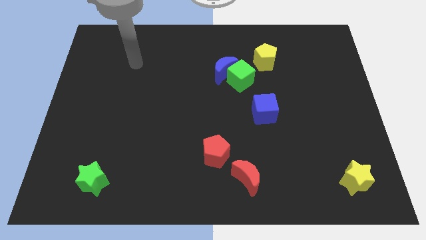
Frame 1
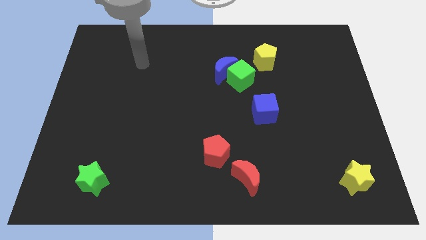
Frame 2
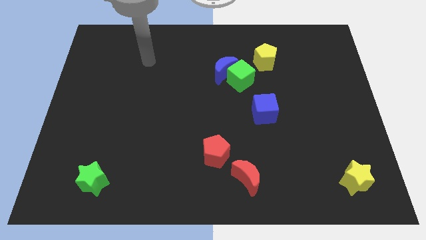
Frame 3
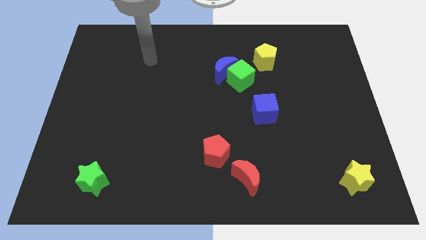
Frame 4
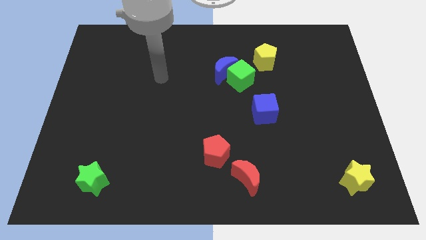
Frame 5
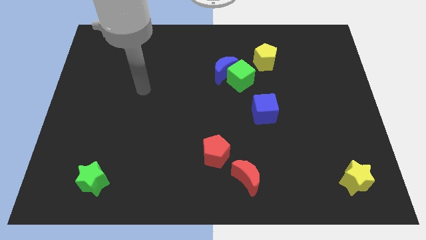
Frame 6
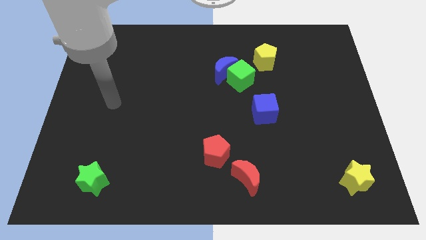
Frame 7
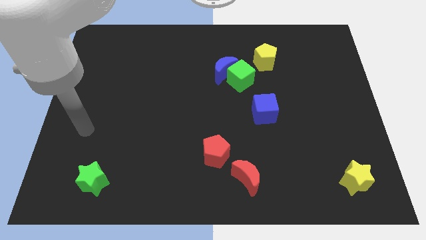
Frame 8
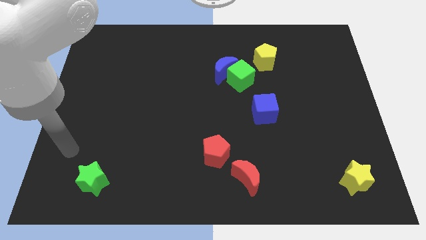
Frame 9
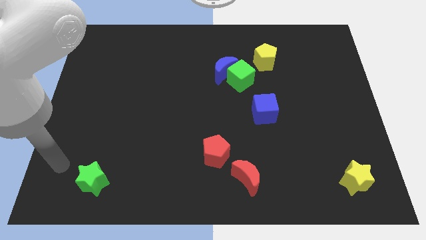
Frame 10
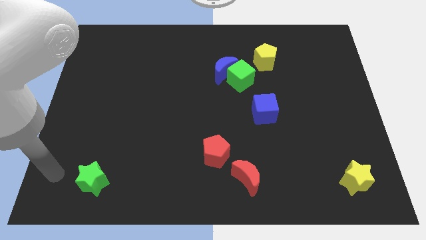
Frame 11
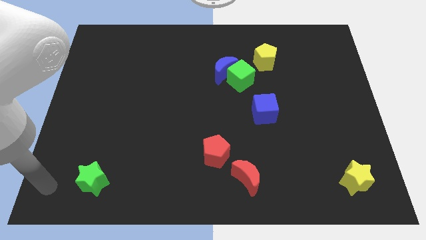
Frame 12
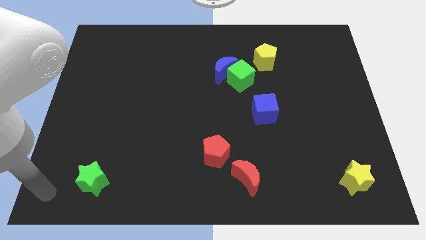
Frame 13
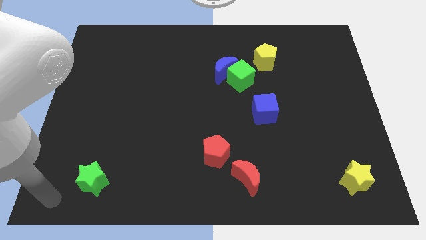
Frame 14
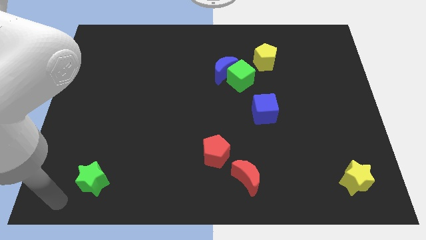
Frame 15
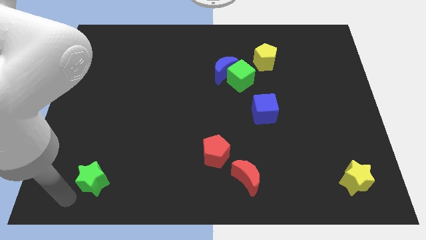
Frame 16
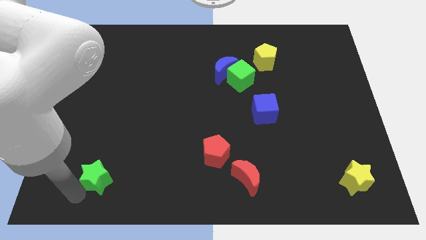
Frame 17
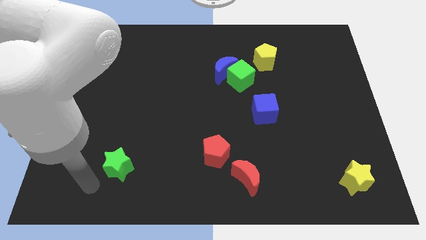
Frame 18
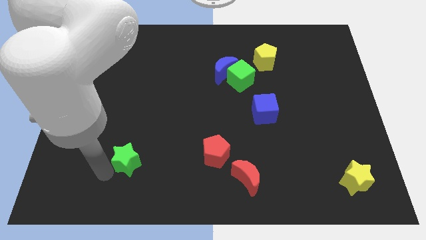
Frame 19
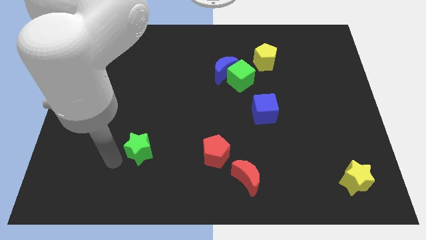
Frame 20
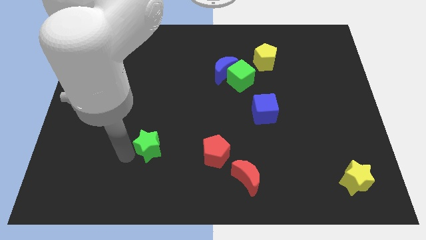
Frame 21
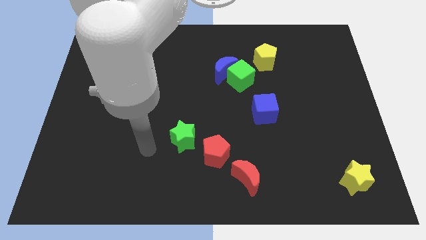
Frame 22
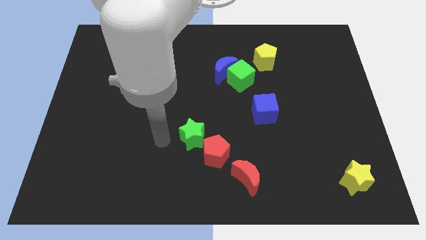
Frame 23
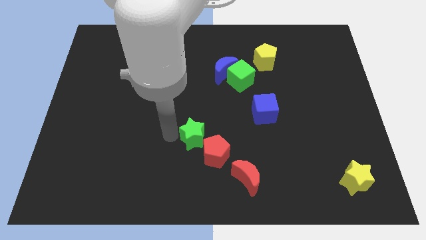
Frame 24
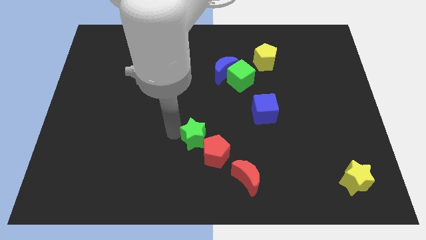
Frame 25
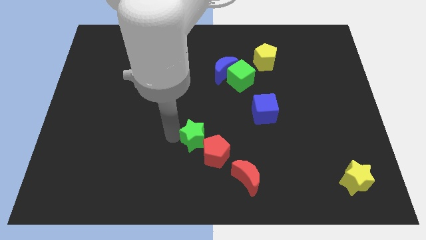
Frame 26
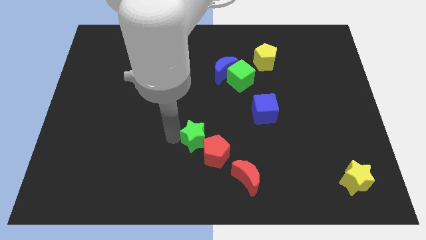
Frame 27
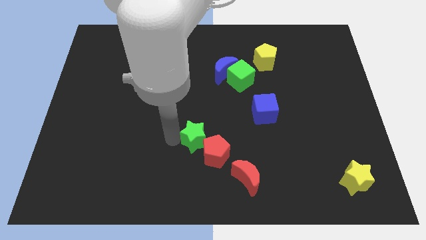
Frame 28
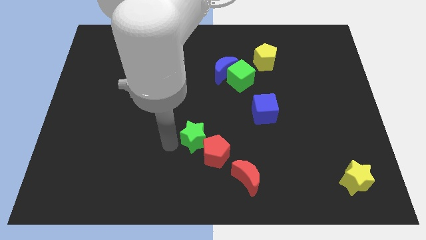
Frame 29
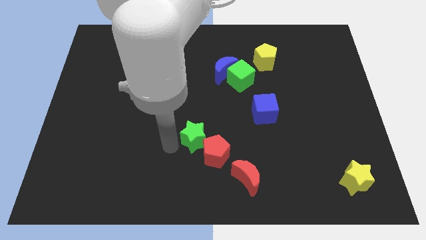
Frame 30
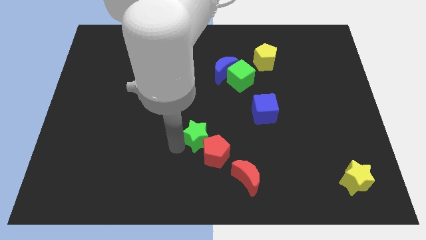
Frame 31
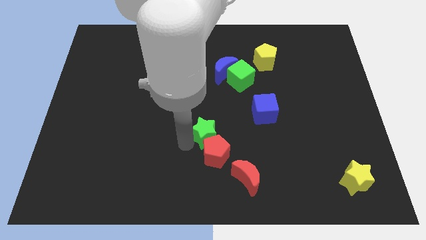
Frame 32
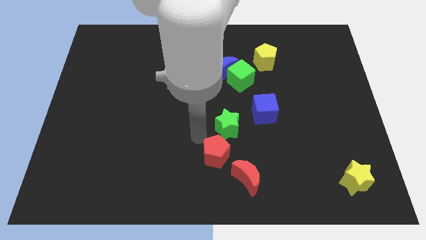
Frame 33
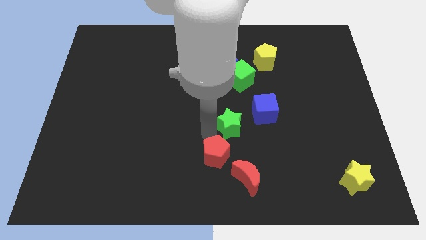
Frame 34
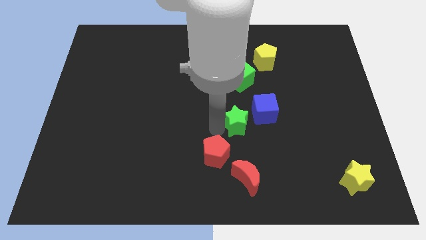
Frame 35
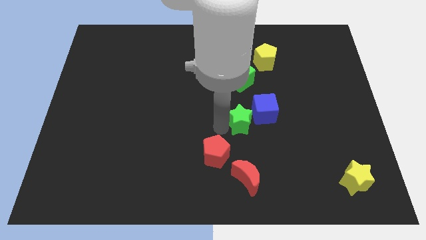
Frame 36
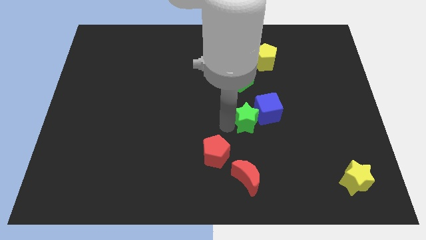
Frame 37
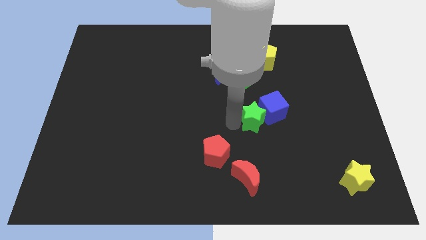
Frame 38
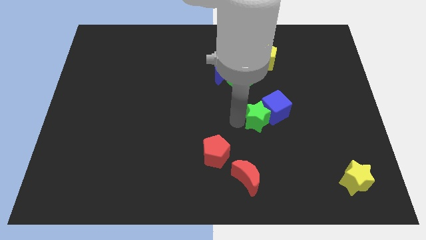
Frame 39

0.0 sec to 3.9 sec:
move the green star close to the blue cube

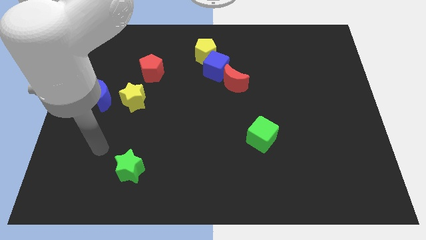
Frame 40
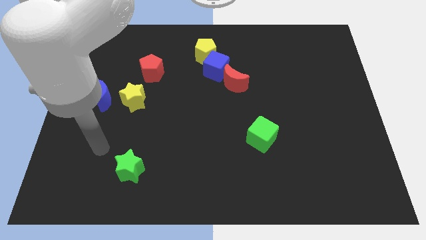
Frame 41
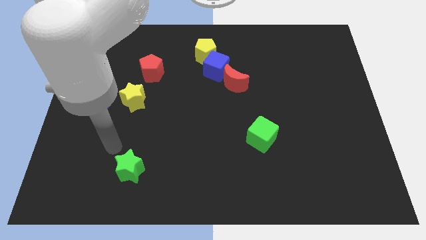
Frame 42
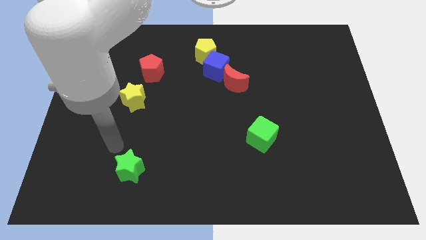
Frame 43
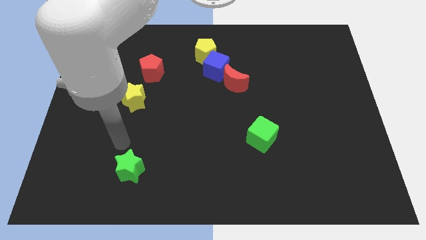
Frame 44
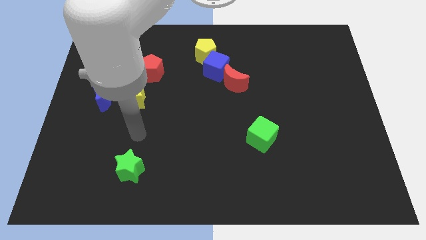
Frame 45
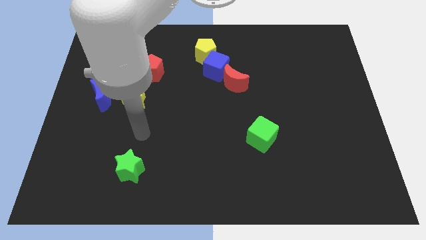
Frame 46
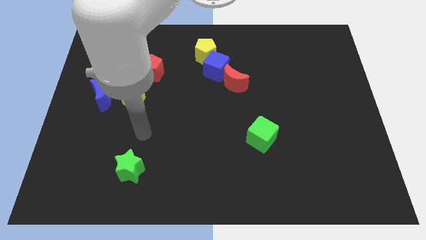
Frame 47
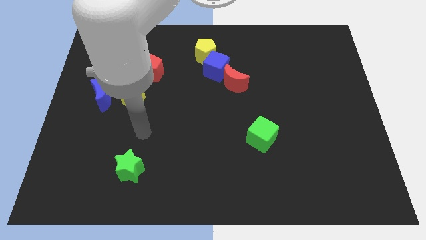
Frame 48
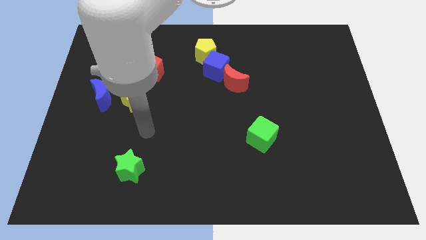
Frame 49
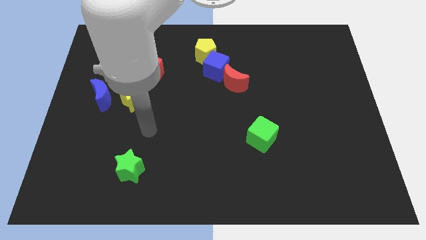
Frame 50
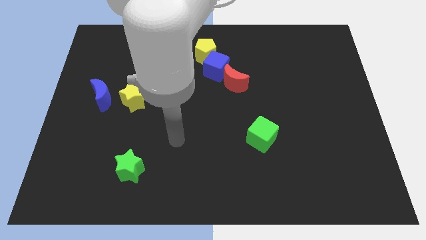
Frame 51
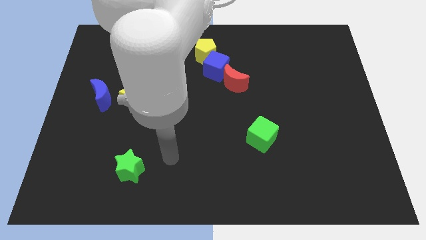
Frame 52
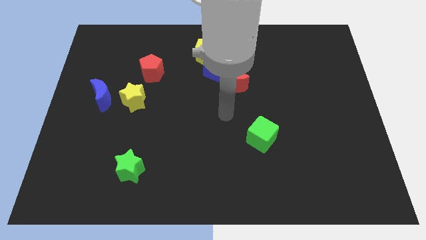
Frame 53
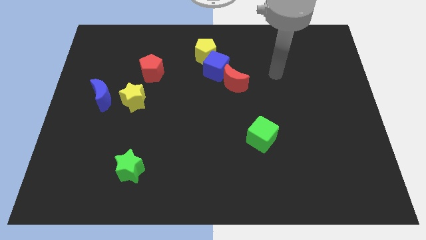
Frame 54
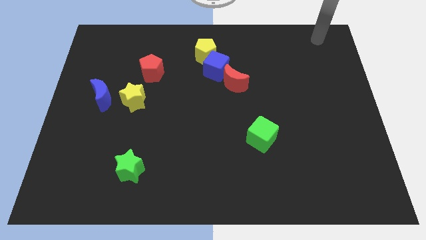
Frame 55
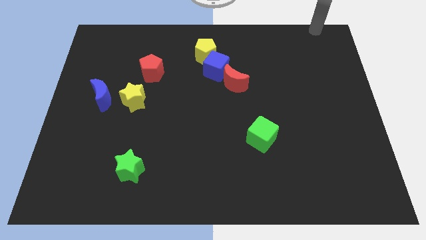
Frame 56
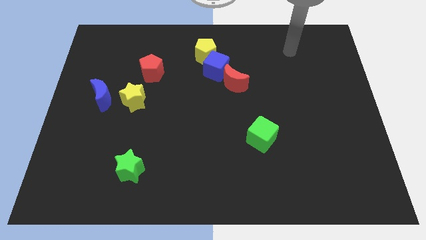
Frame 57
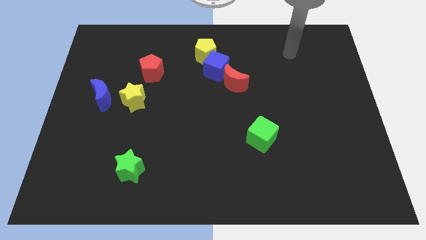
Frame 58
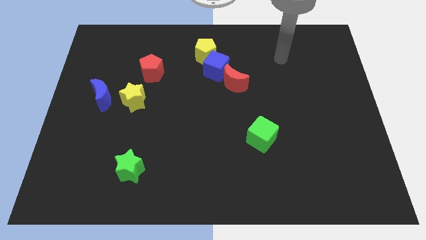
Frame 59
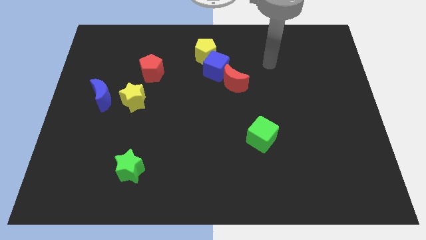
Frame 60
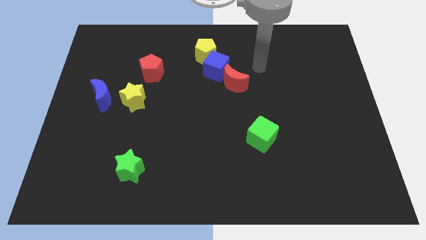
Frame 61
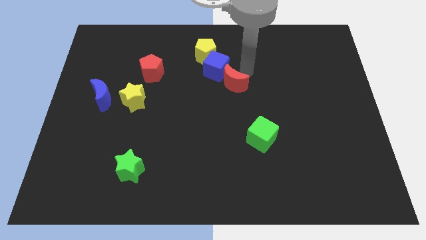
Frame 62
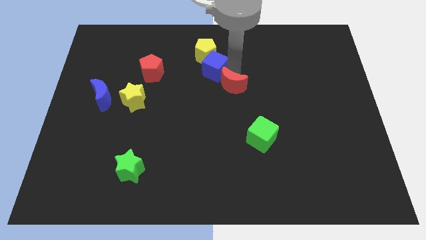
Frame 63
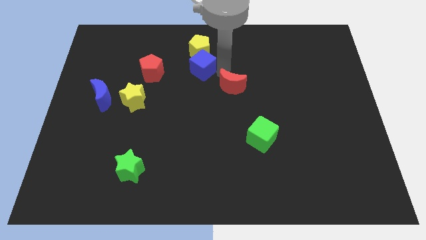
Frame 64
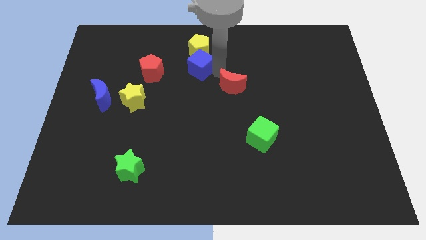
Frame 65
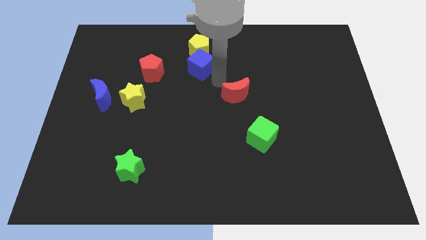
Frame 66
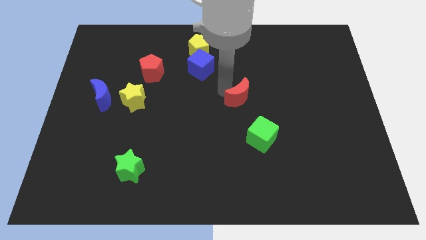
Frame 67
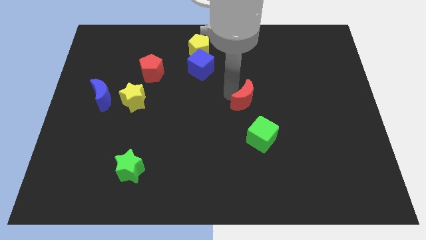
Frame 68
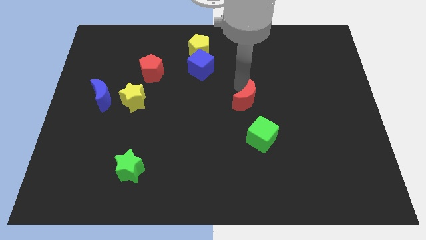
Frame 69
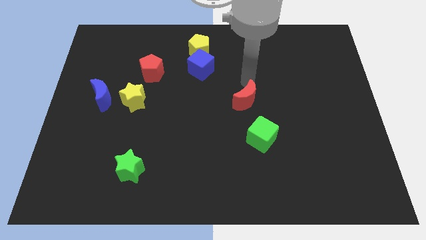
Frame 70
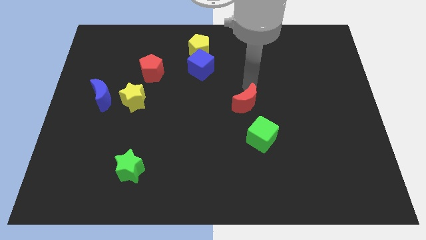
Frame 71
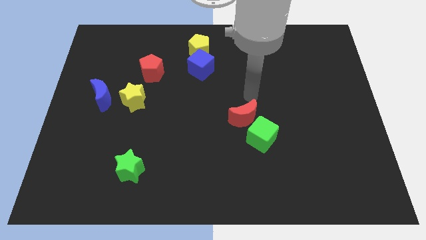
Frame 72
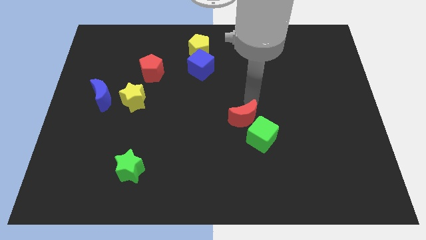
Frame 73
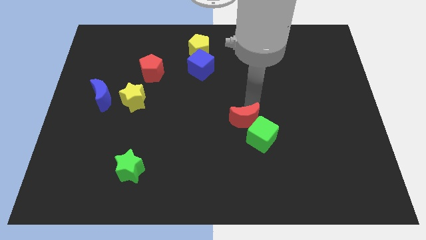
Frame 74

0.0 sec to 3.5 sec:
move the red moon towards the green cube

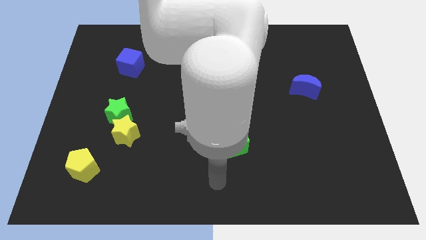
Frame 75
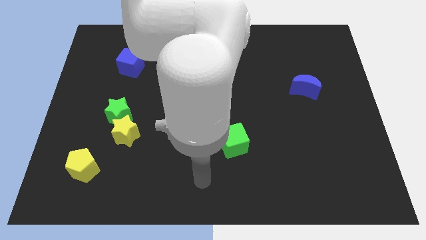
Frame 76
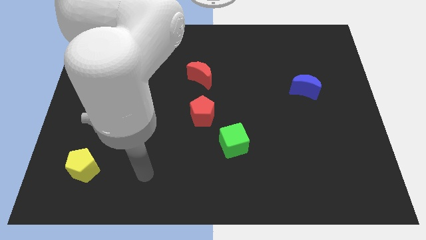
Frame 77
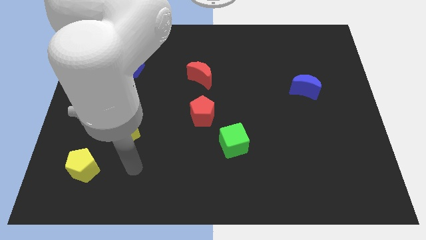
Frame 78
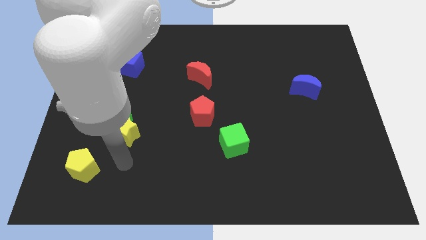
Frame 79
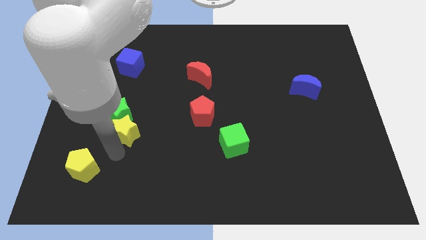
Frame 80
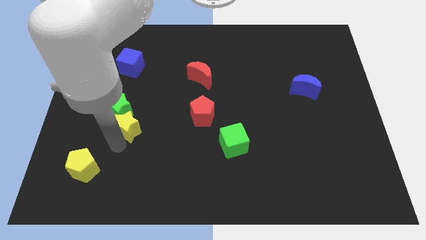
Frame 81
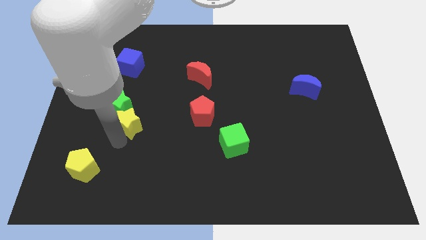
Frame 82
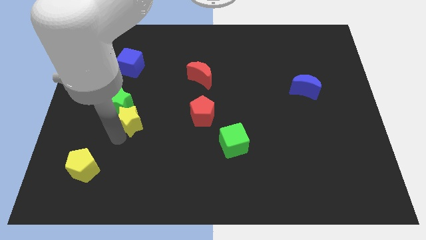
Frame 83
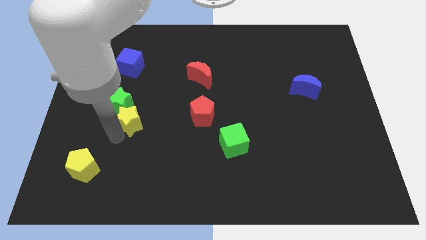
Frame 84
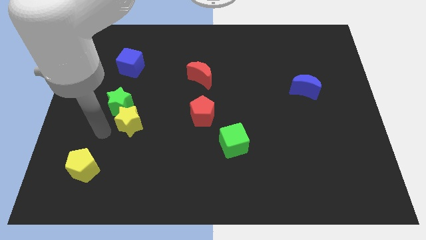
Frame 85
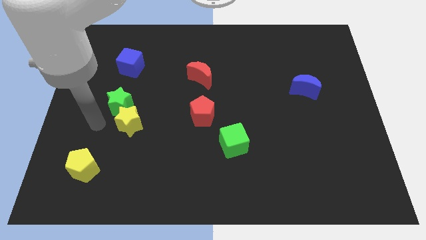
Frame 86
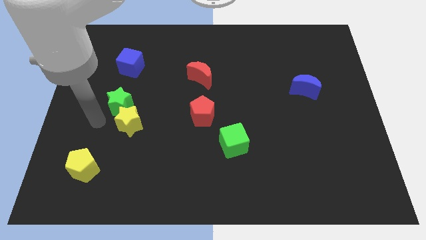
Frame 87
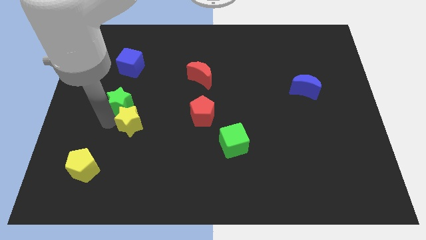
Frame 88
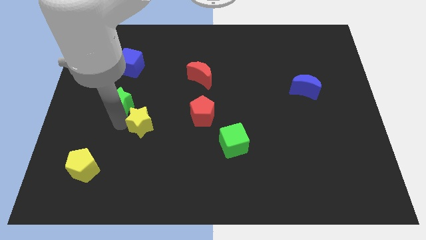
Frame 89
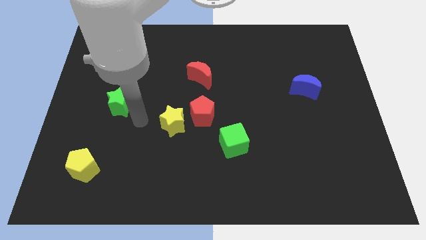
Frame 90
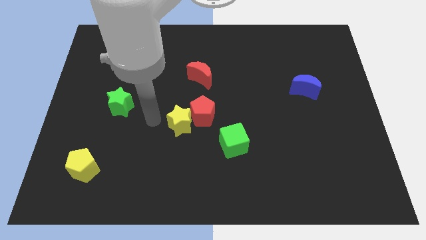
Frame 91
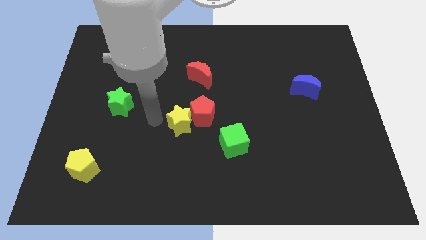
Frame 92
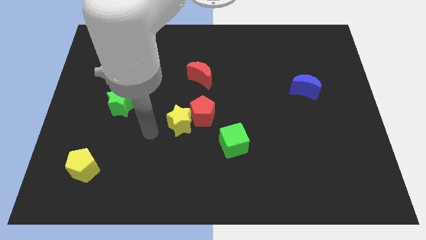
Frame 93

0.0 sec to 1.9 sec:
slide the yellow star to the red pentagon
